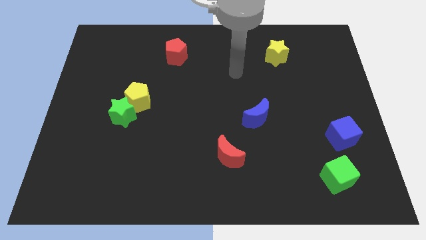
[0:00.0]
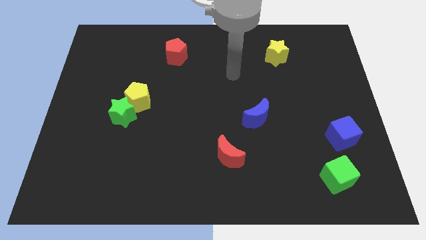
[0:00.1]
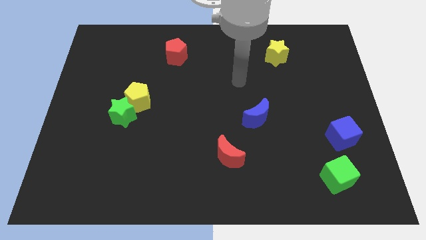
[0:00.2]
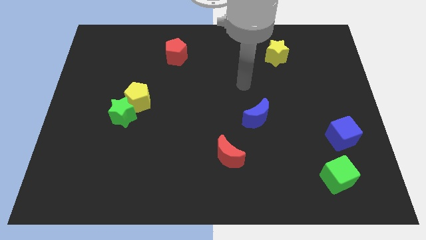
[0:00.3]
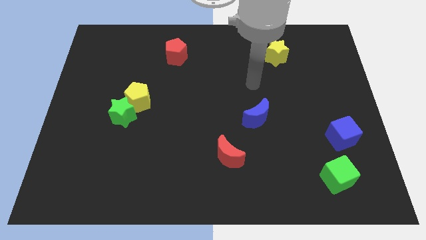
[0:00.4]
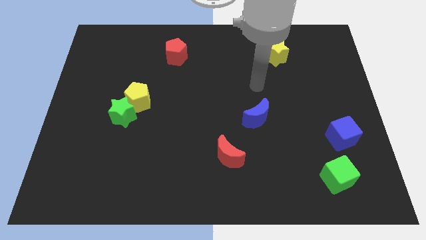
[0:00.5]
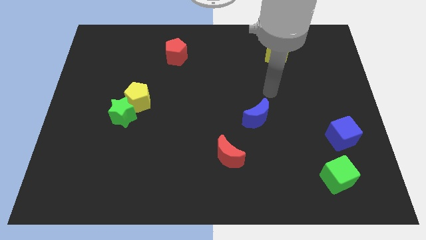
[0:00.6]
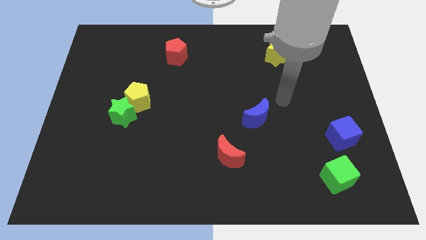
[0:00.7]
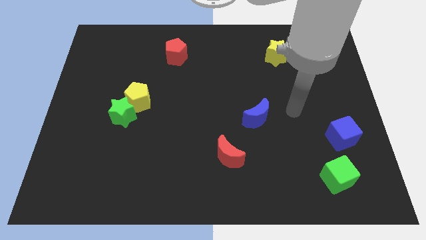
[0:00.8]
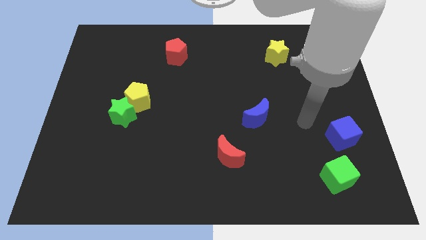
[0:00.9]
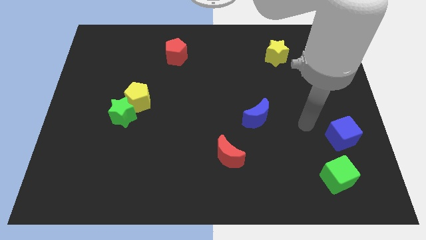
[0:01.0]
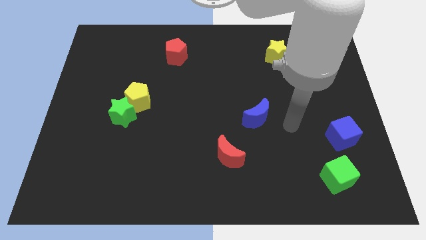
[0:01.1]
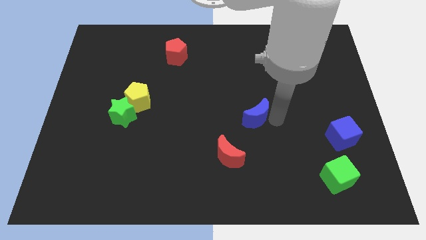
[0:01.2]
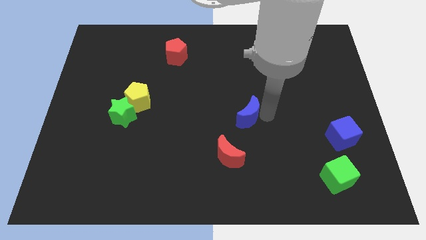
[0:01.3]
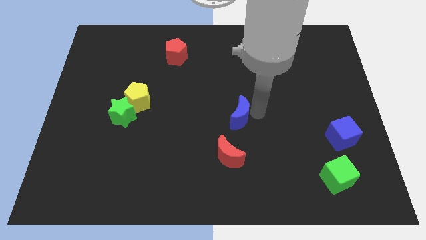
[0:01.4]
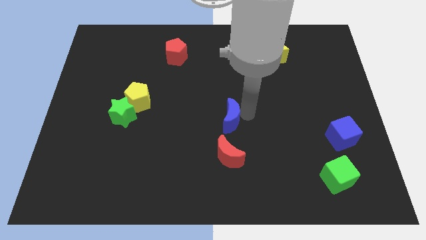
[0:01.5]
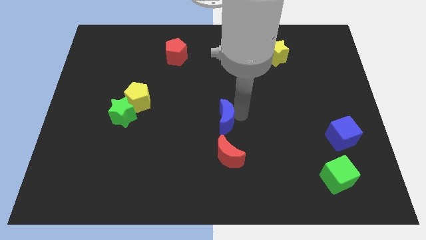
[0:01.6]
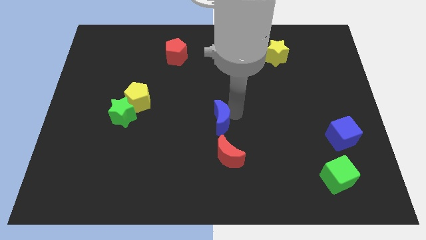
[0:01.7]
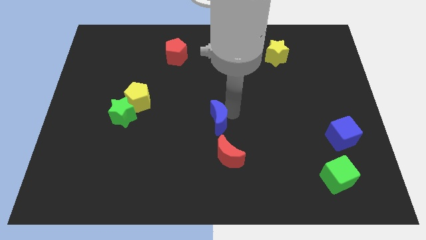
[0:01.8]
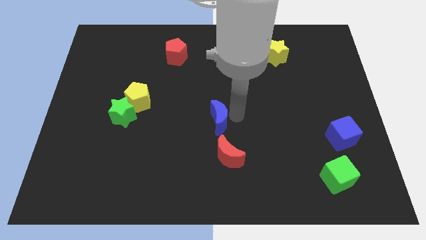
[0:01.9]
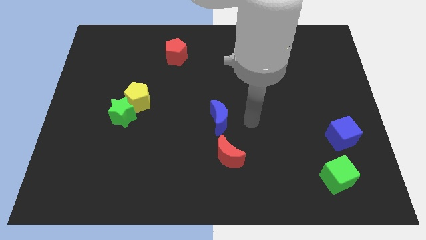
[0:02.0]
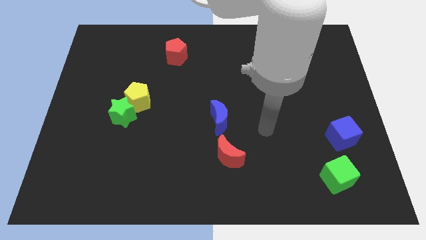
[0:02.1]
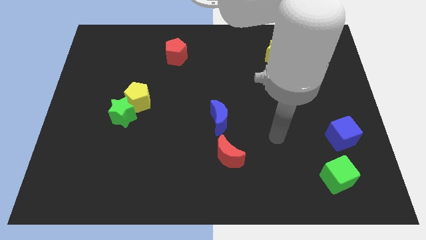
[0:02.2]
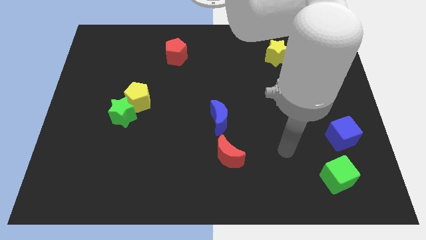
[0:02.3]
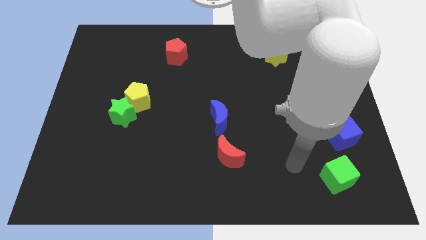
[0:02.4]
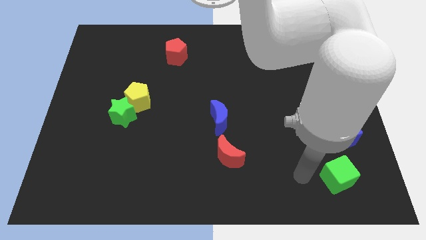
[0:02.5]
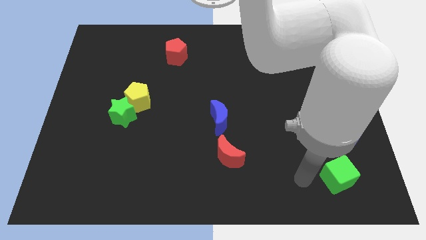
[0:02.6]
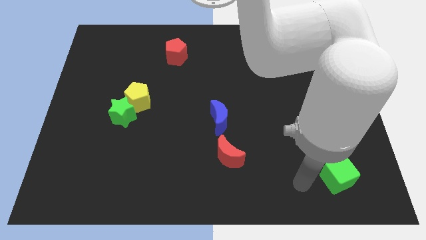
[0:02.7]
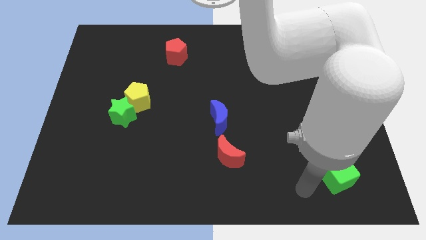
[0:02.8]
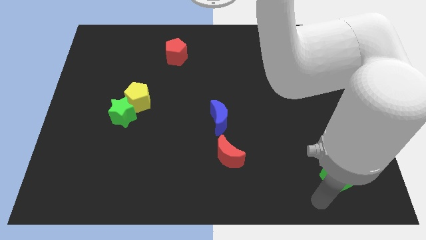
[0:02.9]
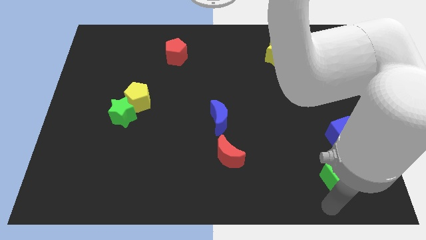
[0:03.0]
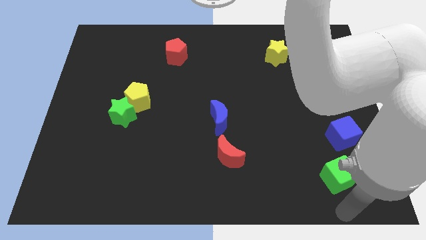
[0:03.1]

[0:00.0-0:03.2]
place the blue moon above the red moon

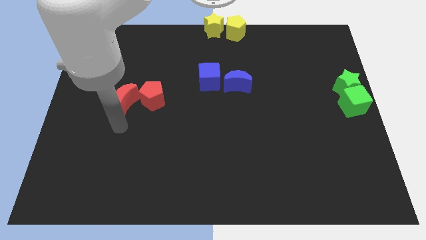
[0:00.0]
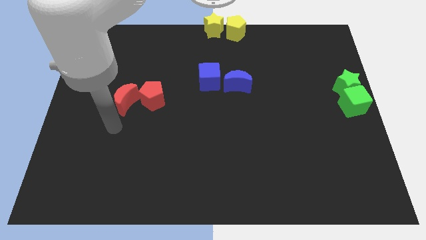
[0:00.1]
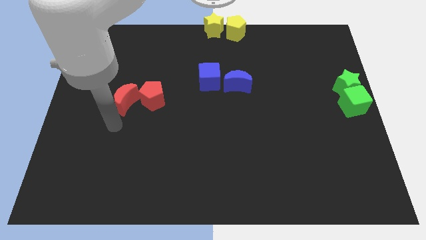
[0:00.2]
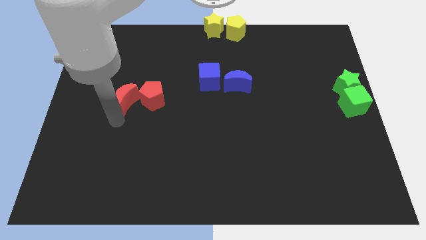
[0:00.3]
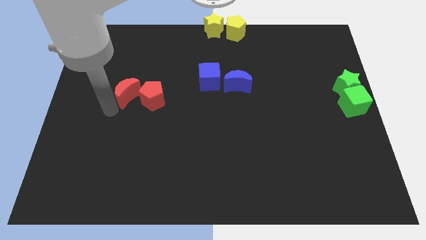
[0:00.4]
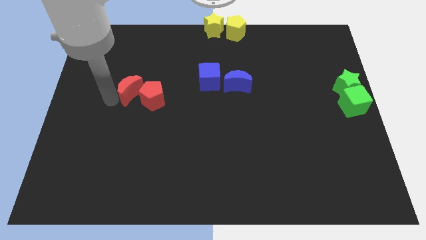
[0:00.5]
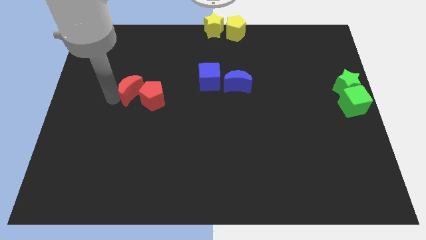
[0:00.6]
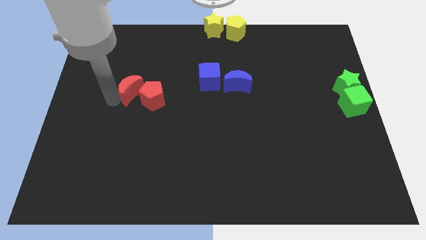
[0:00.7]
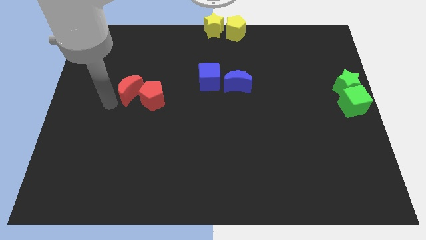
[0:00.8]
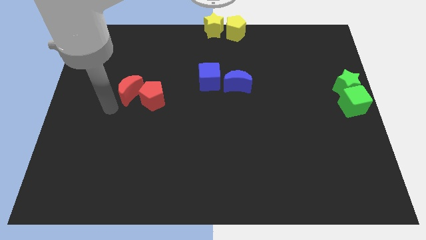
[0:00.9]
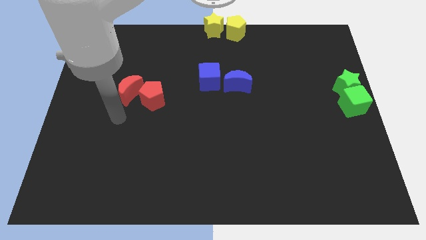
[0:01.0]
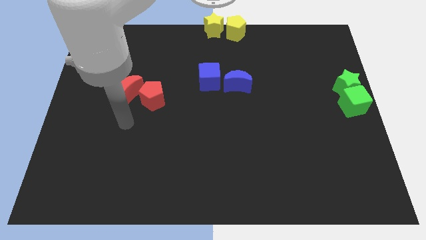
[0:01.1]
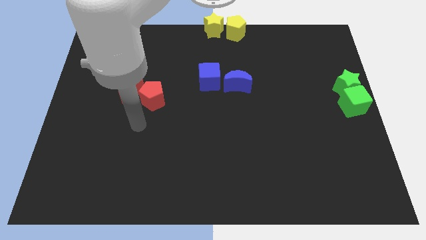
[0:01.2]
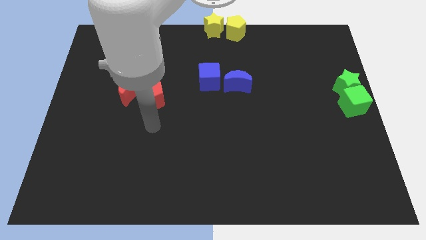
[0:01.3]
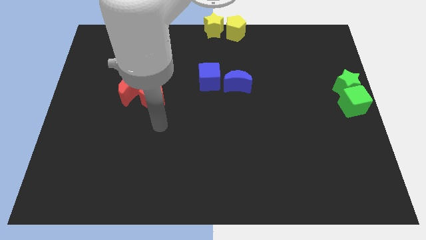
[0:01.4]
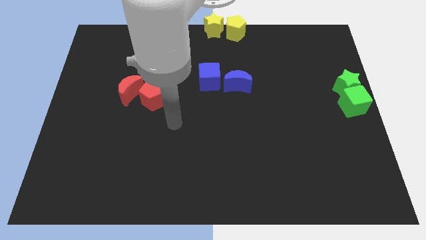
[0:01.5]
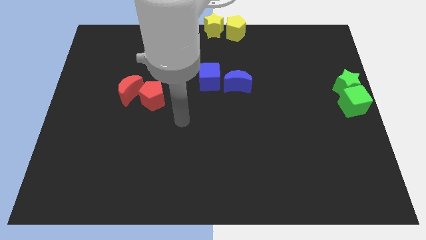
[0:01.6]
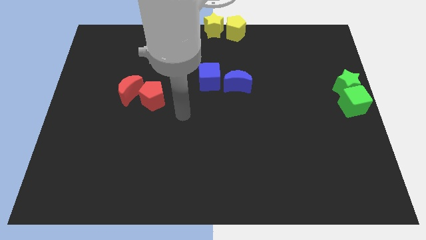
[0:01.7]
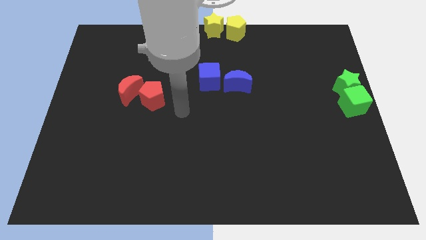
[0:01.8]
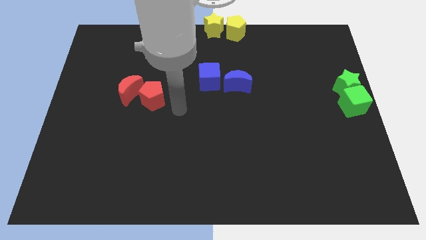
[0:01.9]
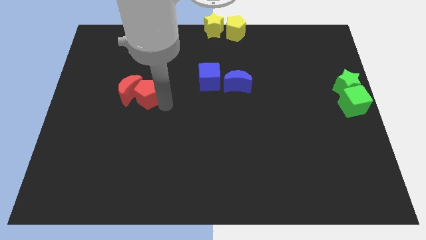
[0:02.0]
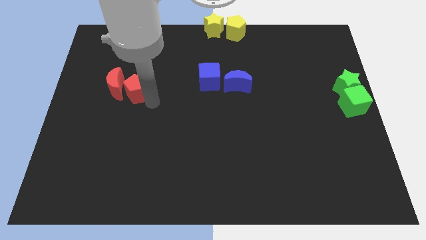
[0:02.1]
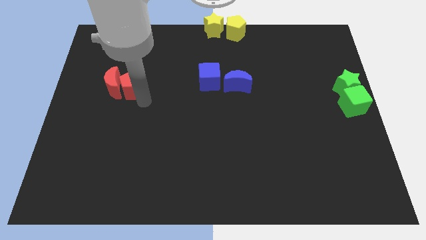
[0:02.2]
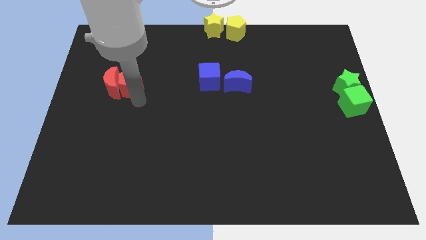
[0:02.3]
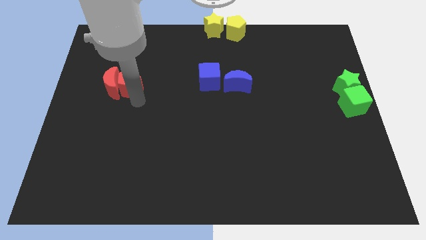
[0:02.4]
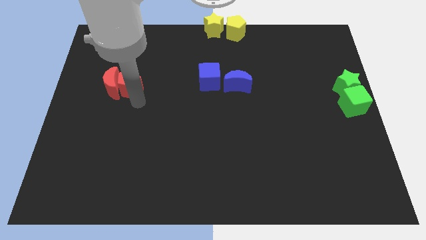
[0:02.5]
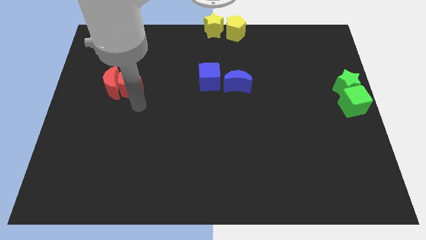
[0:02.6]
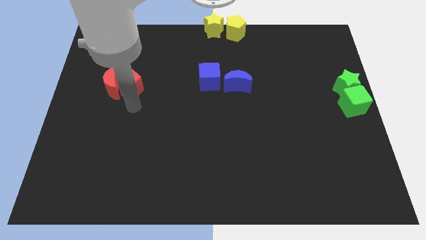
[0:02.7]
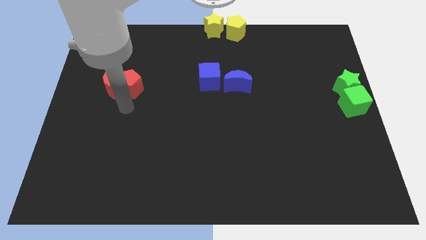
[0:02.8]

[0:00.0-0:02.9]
move the red pentagon and red crescent to the left side of the board

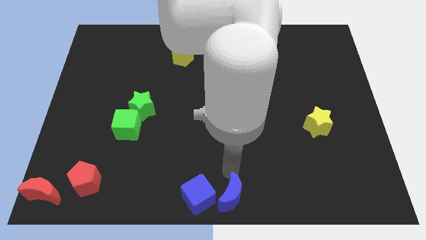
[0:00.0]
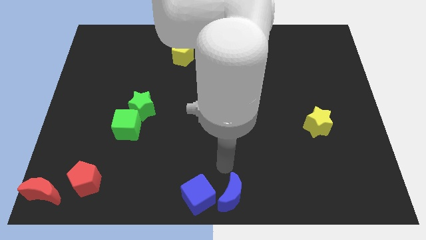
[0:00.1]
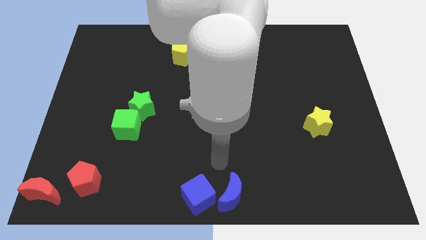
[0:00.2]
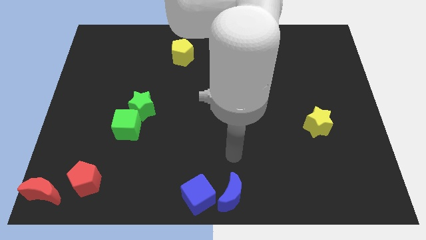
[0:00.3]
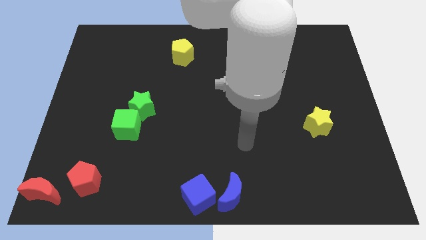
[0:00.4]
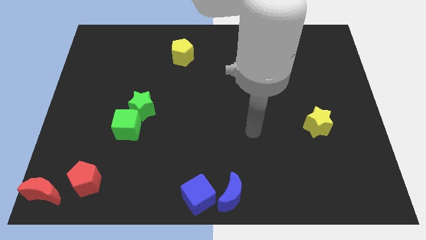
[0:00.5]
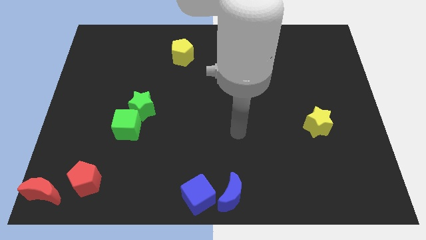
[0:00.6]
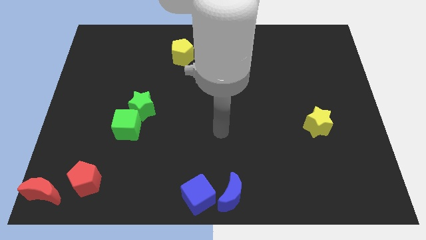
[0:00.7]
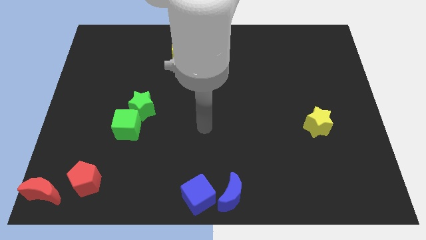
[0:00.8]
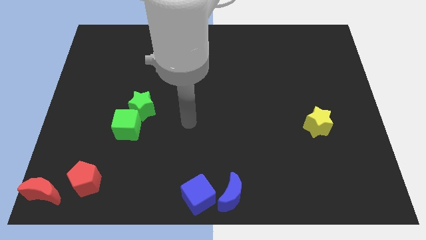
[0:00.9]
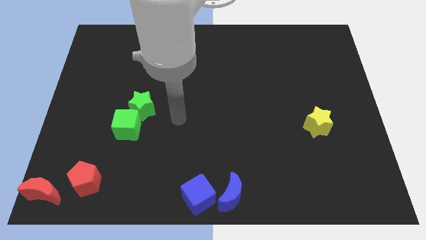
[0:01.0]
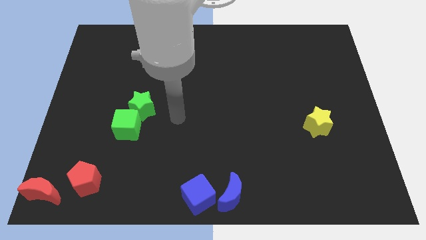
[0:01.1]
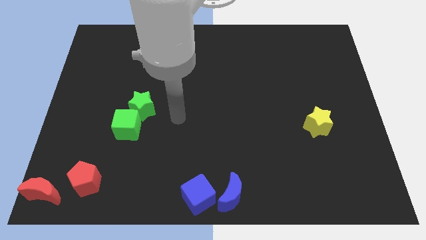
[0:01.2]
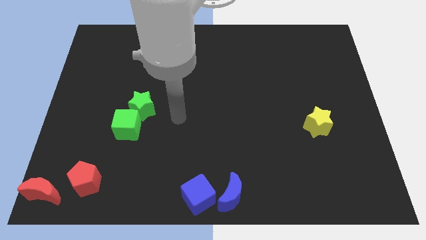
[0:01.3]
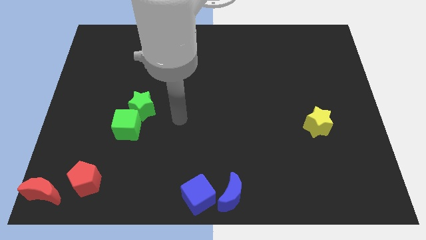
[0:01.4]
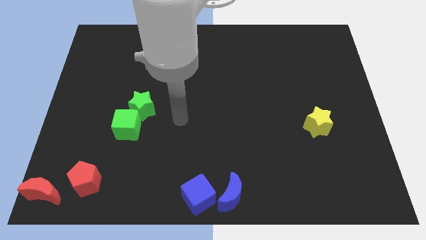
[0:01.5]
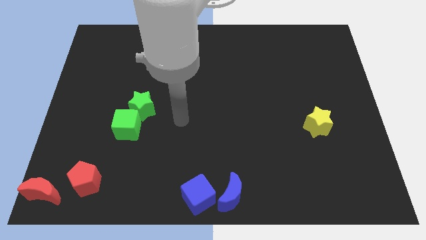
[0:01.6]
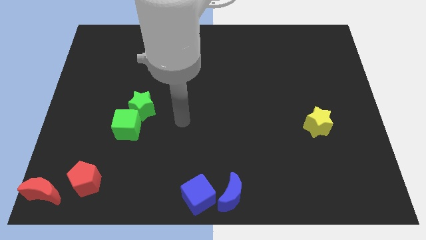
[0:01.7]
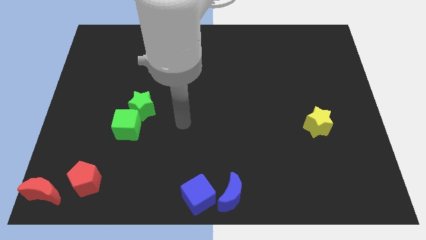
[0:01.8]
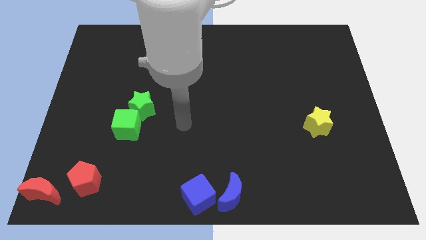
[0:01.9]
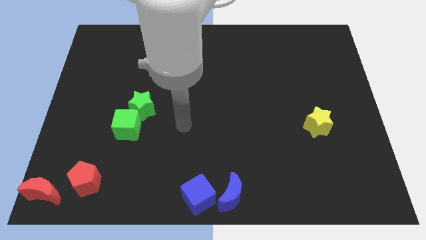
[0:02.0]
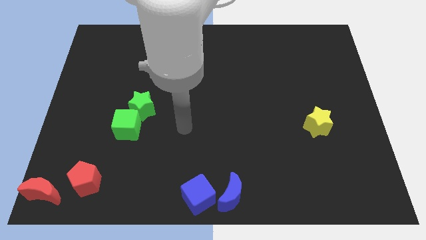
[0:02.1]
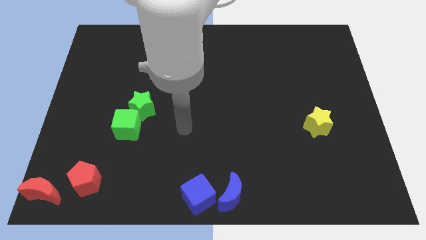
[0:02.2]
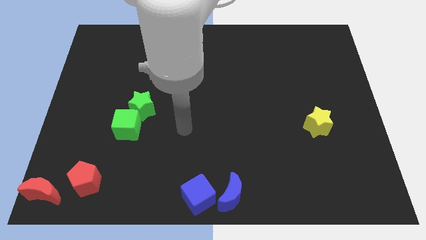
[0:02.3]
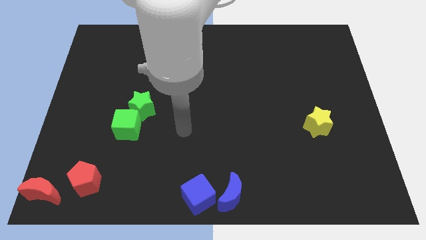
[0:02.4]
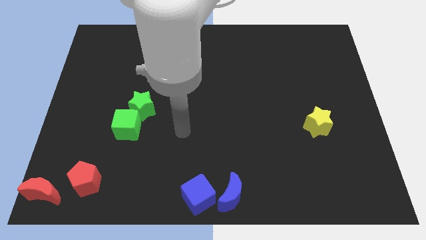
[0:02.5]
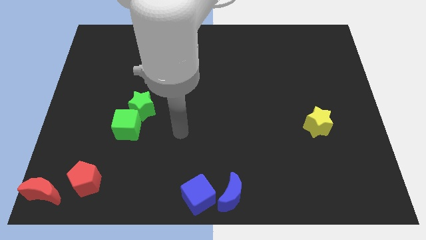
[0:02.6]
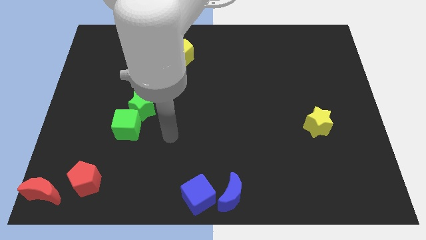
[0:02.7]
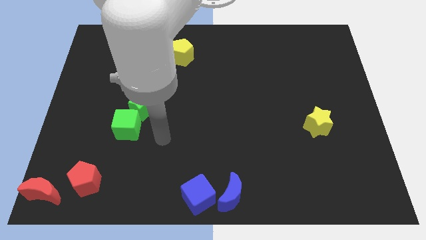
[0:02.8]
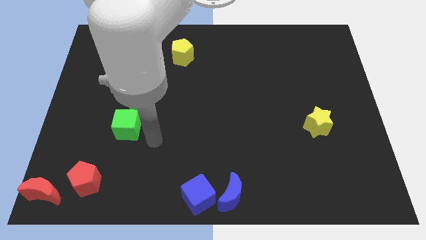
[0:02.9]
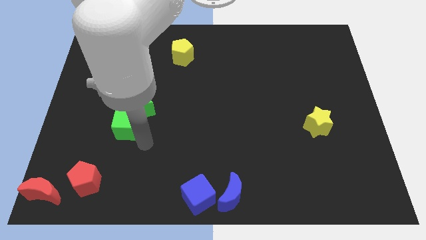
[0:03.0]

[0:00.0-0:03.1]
point your hand at the bottom right side of the green cube

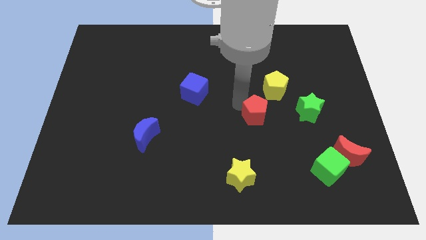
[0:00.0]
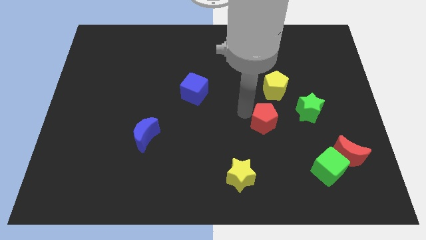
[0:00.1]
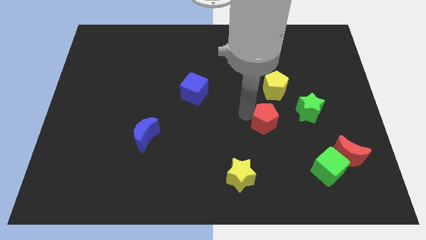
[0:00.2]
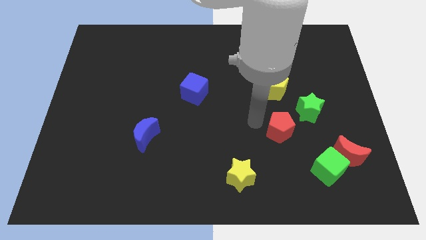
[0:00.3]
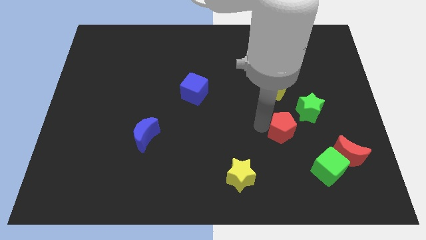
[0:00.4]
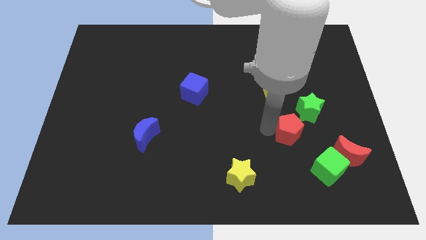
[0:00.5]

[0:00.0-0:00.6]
place the red pentagon below the green star
